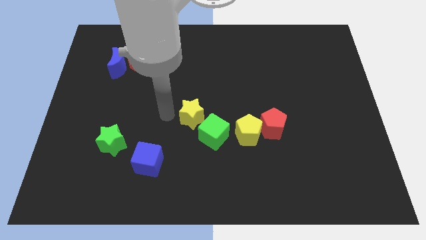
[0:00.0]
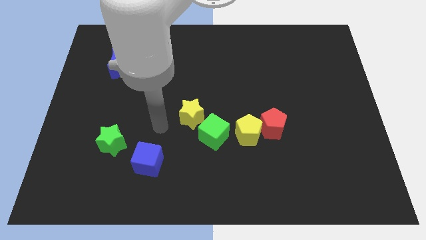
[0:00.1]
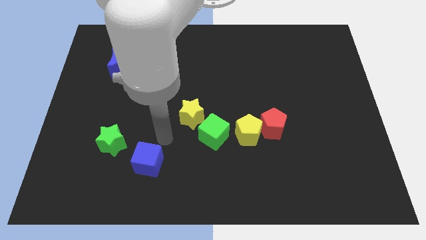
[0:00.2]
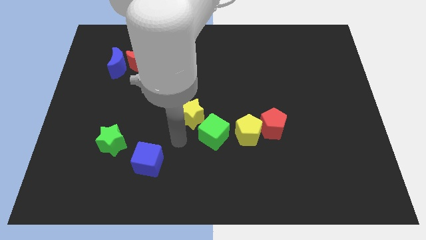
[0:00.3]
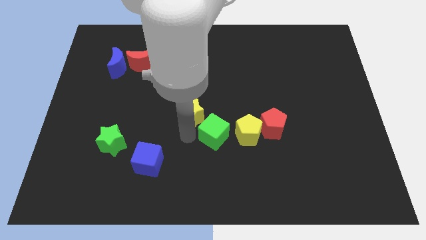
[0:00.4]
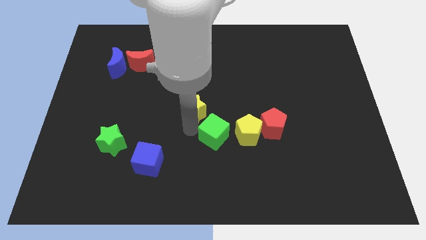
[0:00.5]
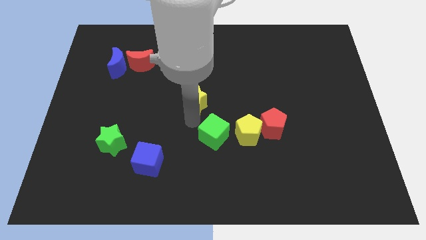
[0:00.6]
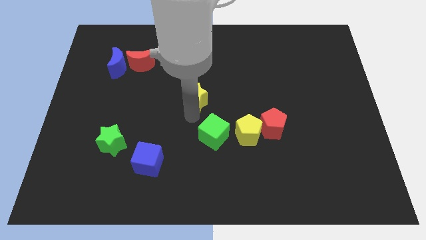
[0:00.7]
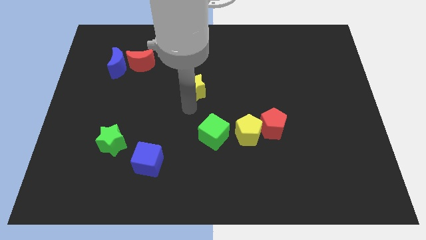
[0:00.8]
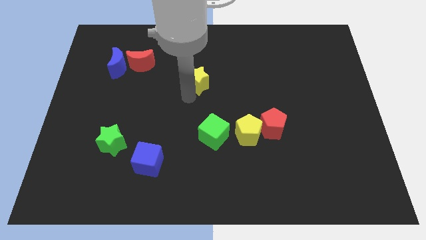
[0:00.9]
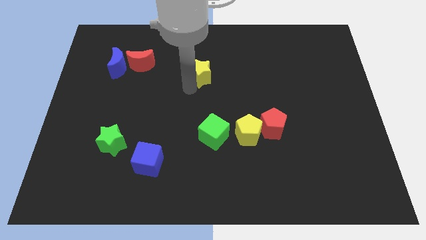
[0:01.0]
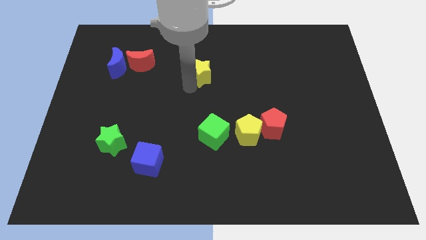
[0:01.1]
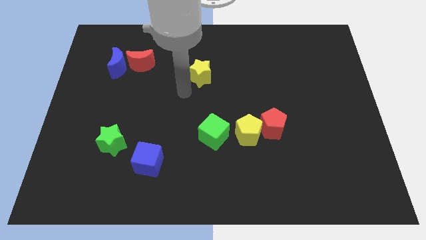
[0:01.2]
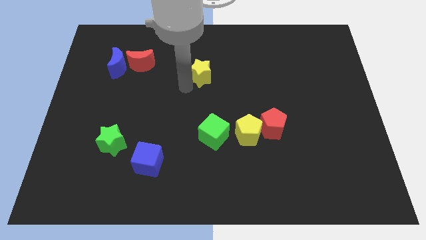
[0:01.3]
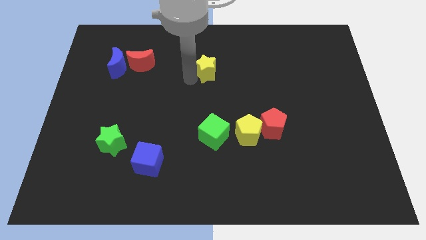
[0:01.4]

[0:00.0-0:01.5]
move the yellow star away from the green cube

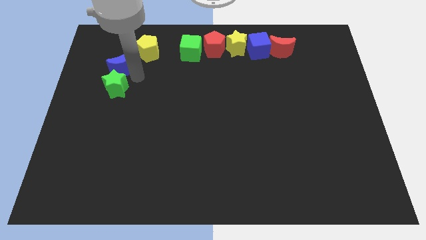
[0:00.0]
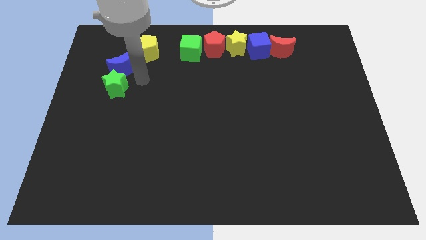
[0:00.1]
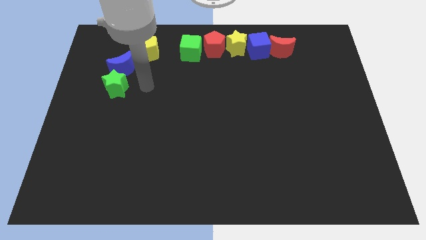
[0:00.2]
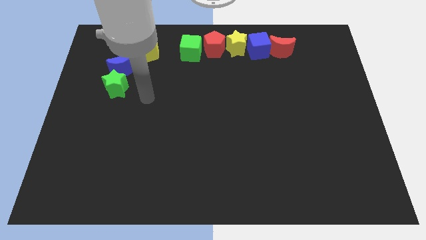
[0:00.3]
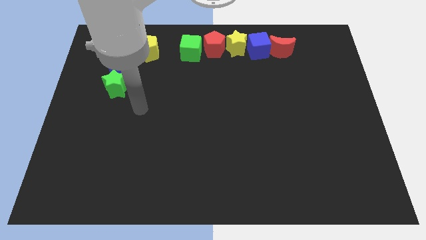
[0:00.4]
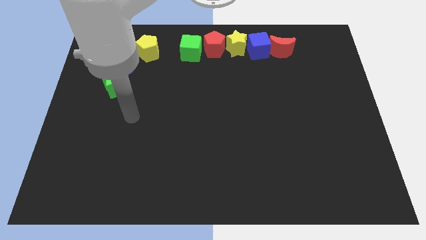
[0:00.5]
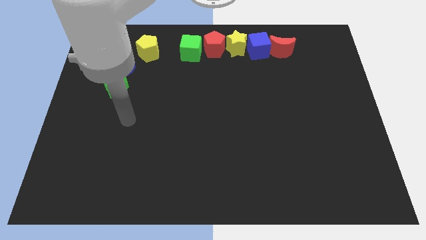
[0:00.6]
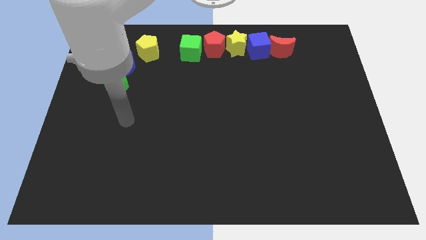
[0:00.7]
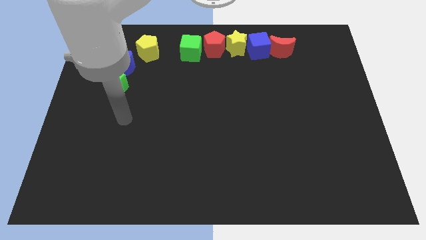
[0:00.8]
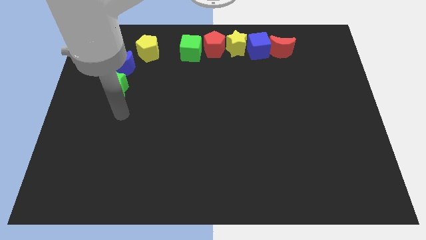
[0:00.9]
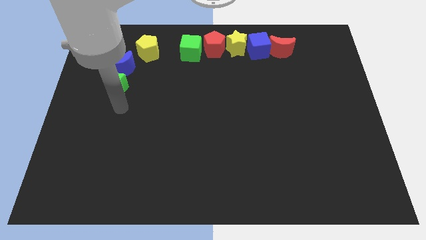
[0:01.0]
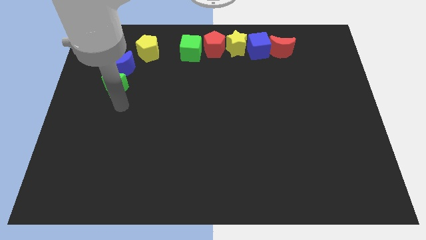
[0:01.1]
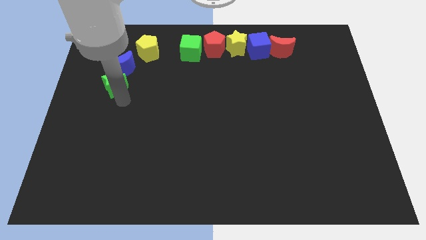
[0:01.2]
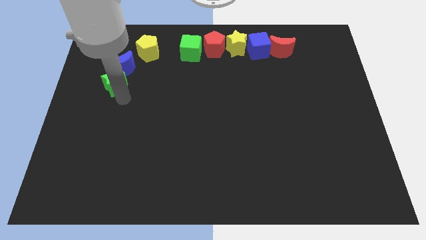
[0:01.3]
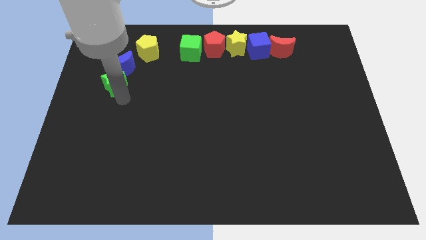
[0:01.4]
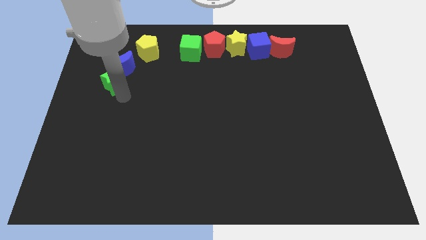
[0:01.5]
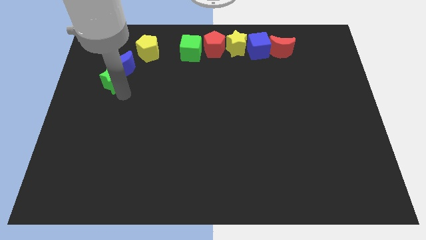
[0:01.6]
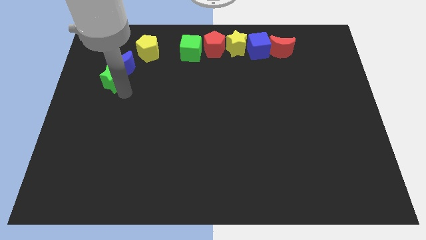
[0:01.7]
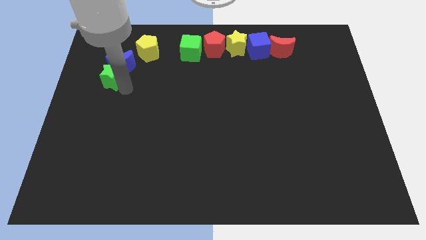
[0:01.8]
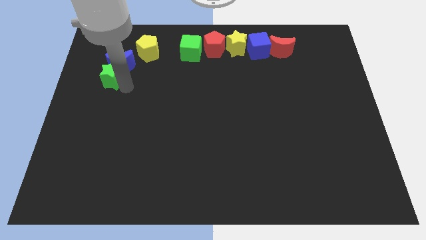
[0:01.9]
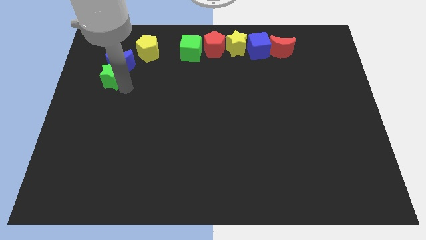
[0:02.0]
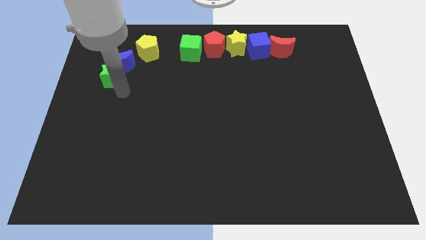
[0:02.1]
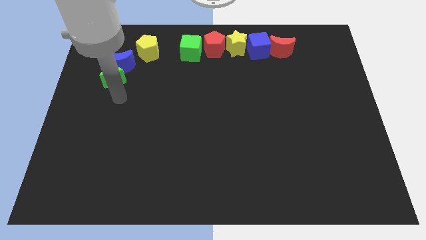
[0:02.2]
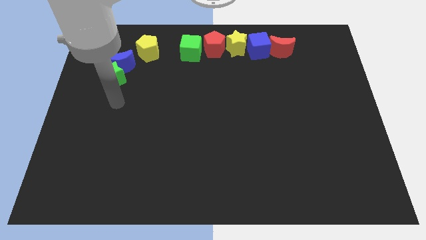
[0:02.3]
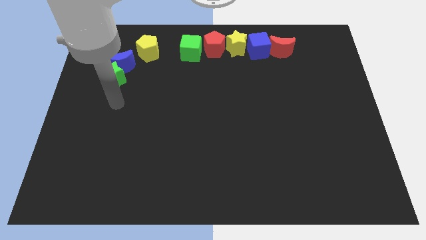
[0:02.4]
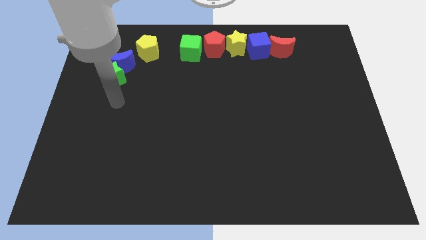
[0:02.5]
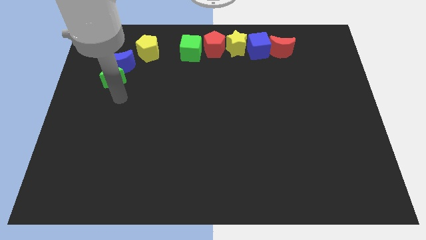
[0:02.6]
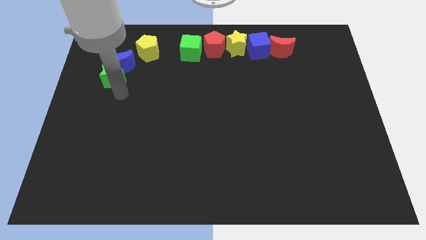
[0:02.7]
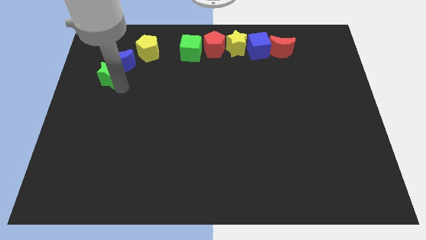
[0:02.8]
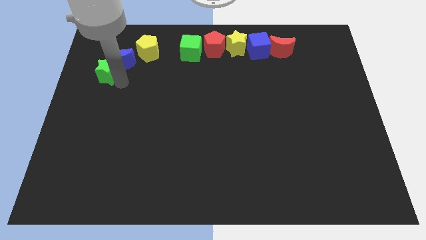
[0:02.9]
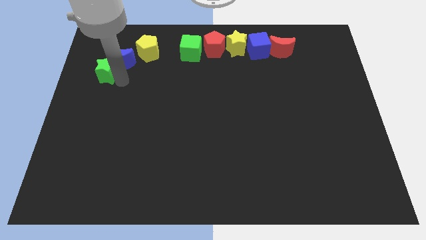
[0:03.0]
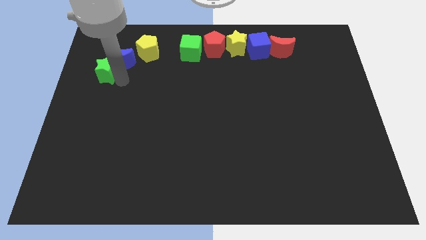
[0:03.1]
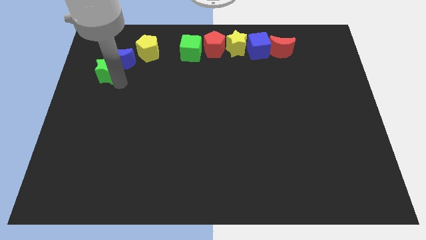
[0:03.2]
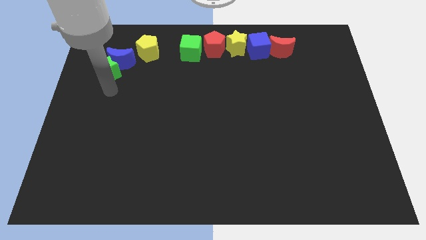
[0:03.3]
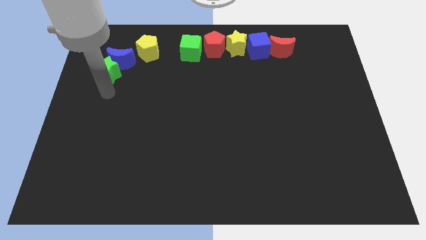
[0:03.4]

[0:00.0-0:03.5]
slide the green star and blue crescent slightly upwards

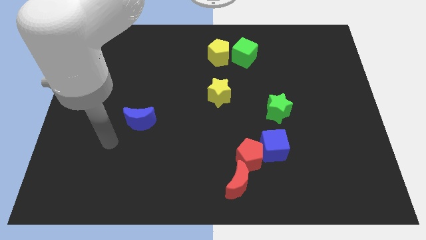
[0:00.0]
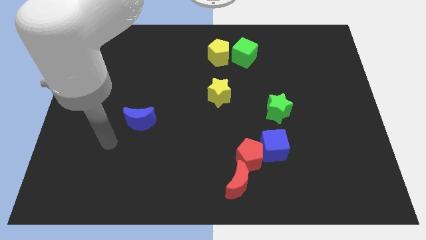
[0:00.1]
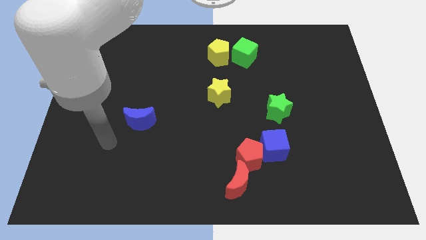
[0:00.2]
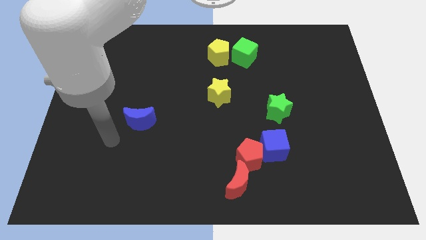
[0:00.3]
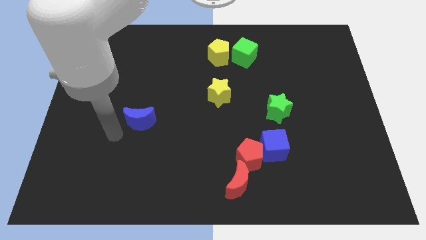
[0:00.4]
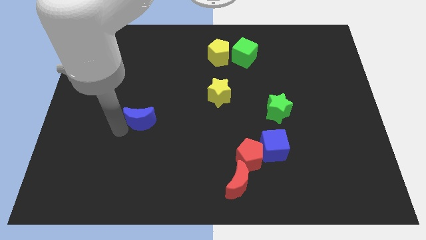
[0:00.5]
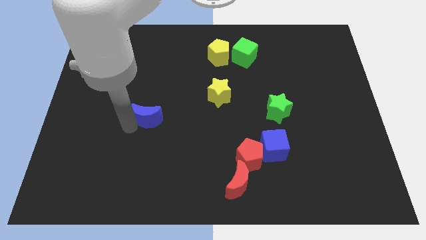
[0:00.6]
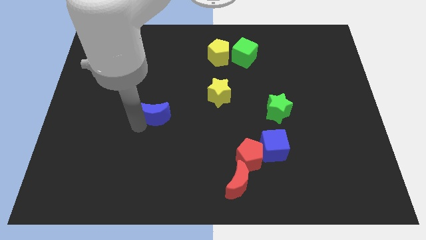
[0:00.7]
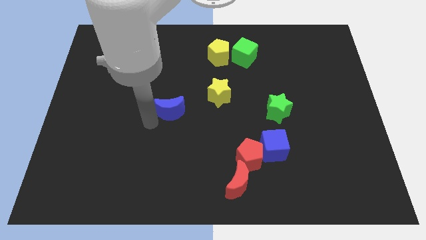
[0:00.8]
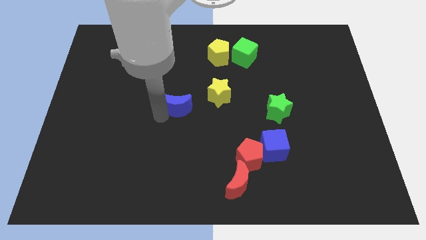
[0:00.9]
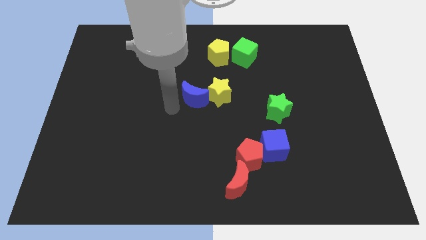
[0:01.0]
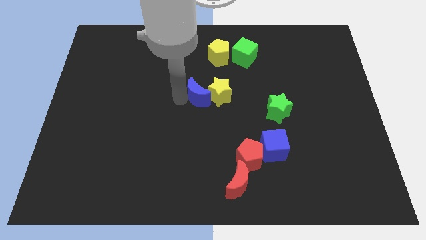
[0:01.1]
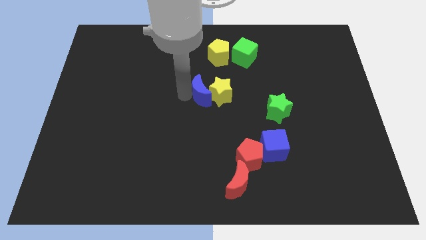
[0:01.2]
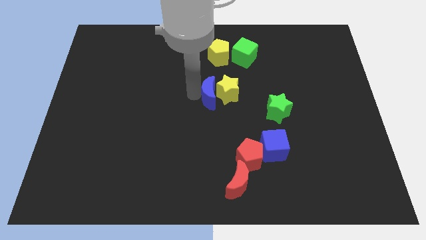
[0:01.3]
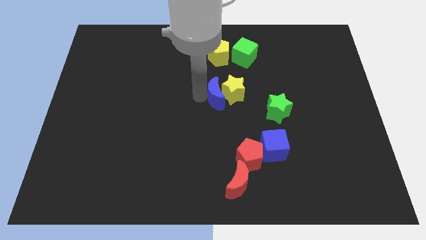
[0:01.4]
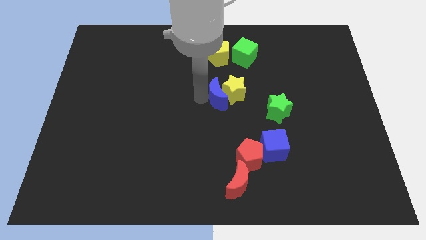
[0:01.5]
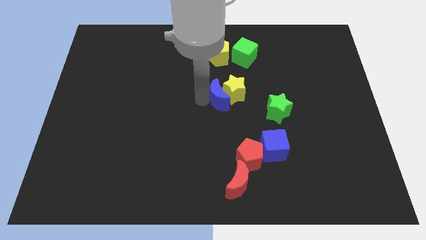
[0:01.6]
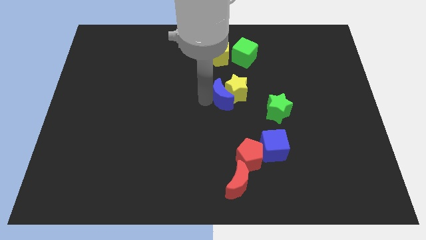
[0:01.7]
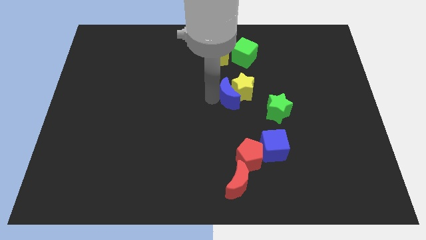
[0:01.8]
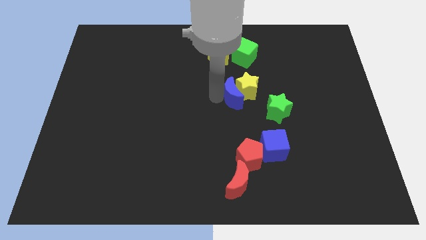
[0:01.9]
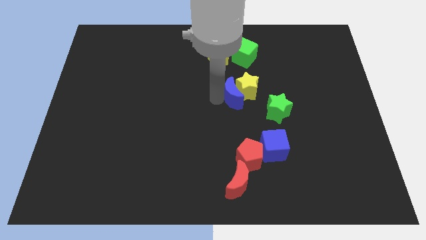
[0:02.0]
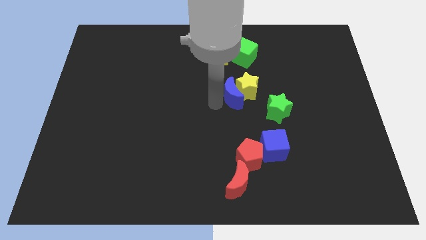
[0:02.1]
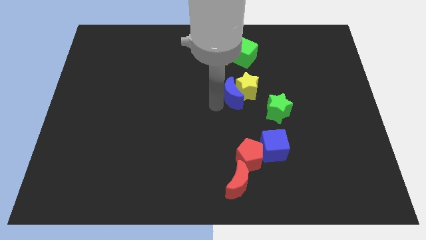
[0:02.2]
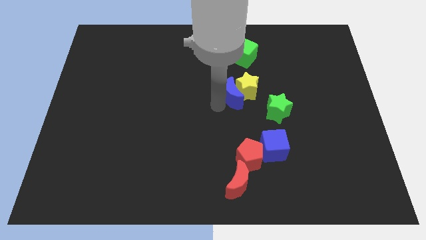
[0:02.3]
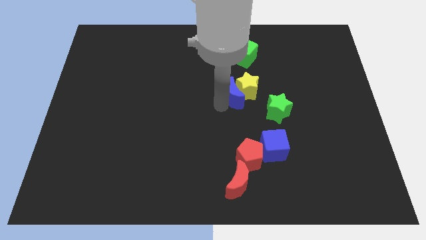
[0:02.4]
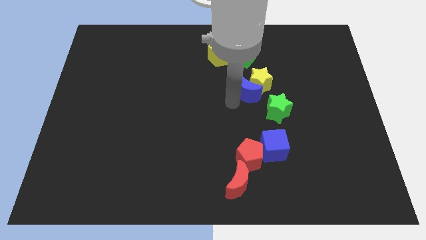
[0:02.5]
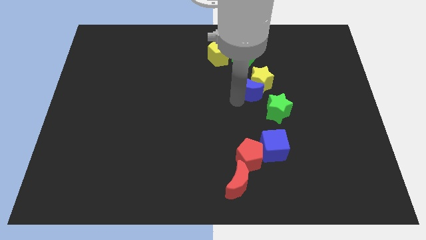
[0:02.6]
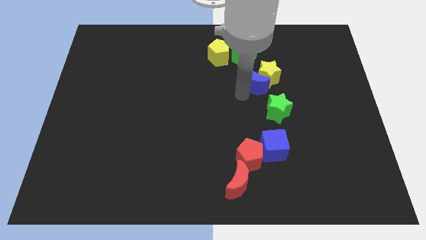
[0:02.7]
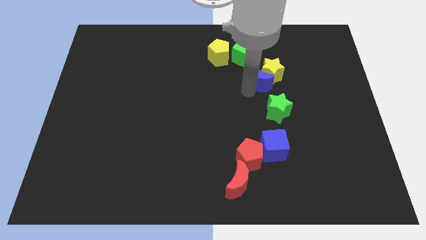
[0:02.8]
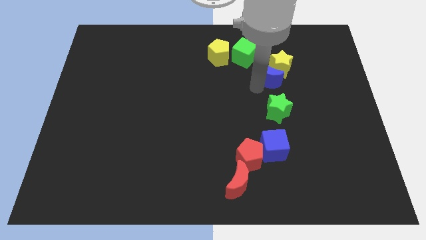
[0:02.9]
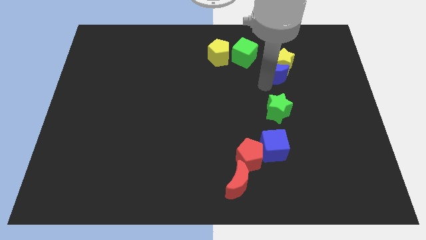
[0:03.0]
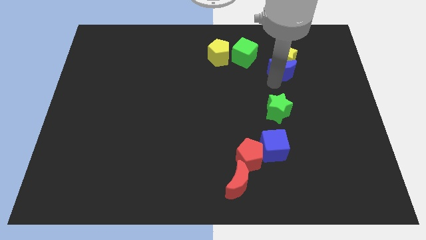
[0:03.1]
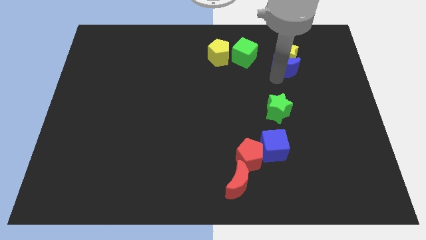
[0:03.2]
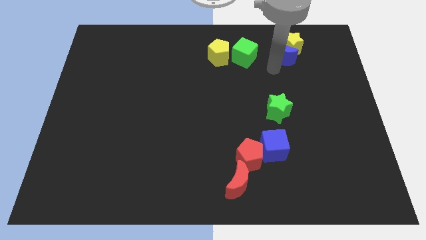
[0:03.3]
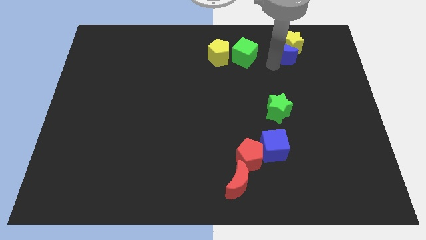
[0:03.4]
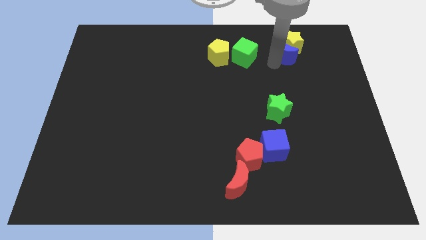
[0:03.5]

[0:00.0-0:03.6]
move blue crescent below yellow star

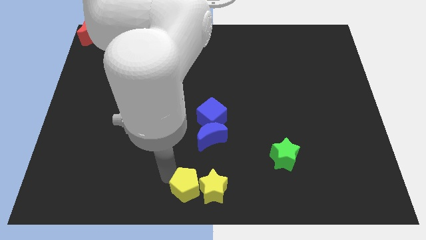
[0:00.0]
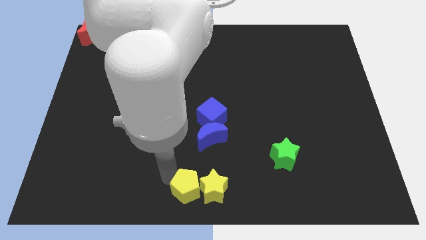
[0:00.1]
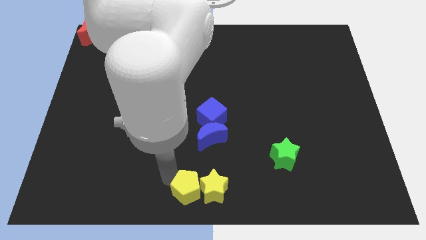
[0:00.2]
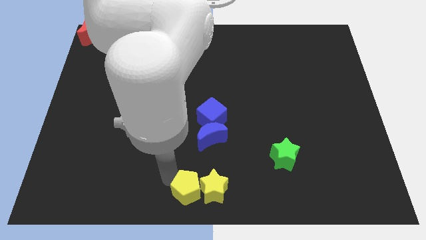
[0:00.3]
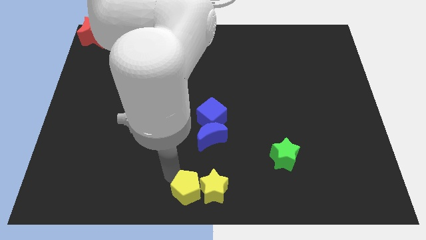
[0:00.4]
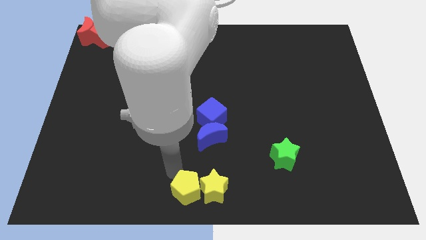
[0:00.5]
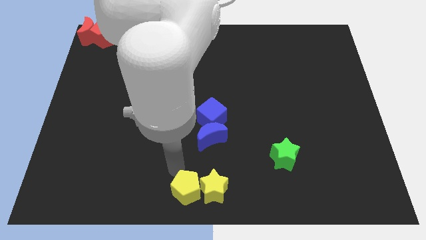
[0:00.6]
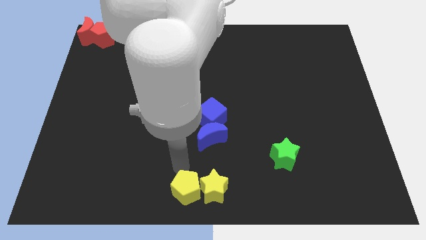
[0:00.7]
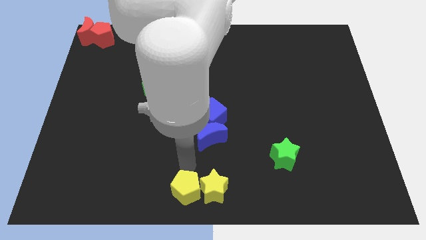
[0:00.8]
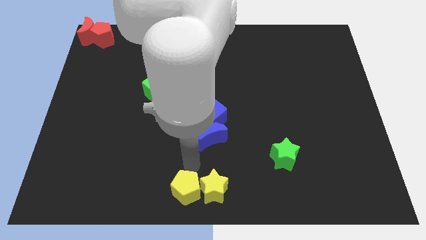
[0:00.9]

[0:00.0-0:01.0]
move the yellow pentagon slightly to the bottom
